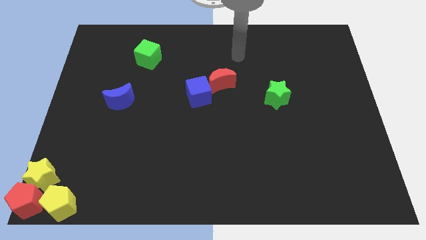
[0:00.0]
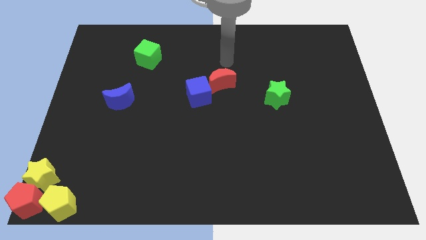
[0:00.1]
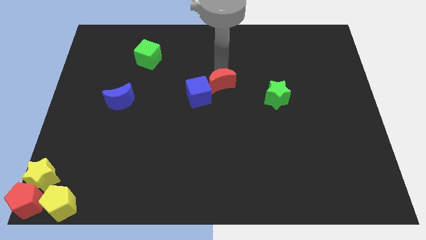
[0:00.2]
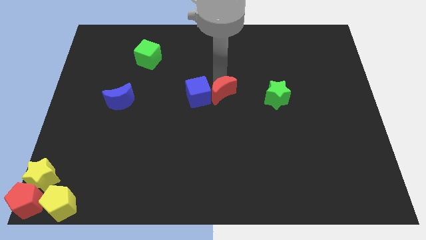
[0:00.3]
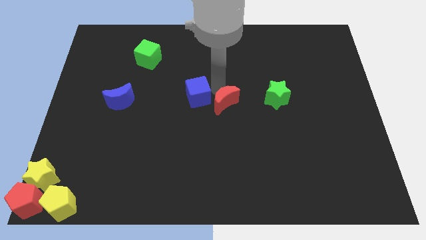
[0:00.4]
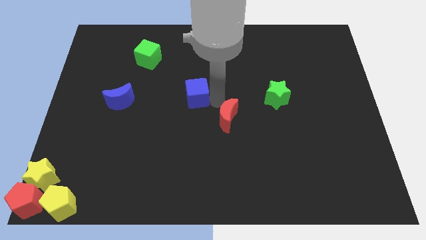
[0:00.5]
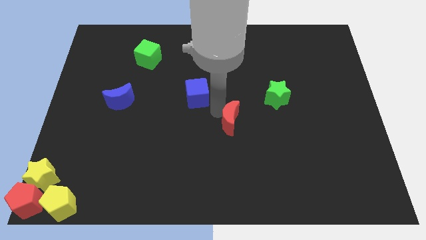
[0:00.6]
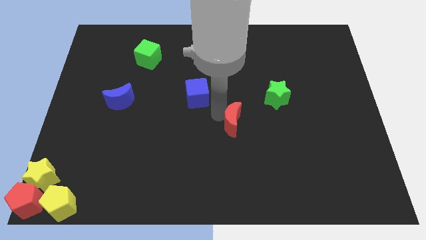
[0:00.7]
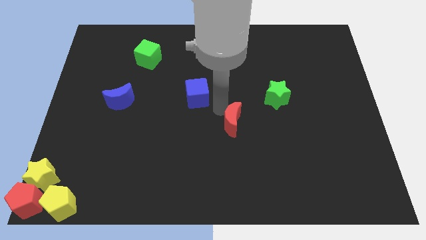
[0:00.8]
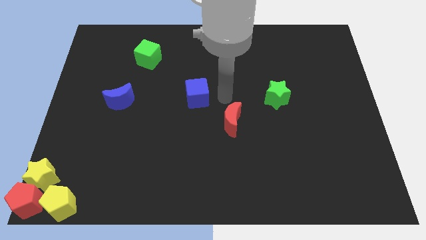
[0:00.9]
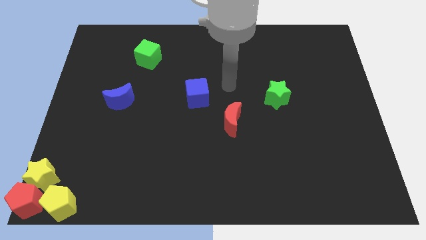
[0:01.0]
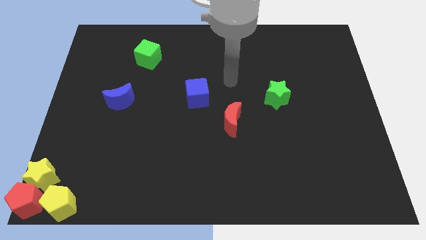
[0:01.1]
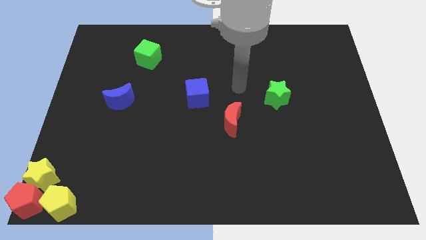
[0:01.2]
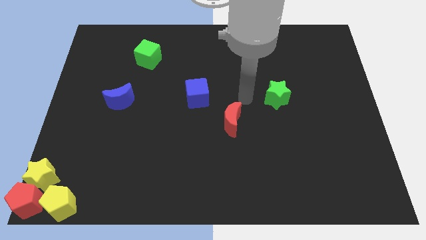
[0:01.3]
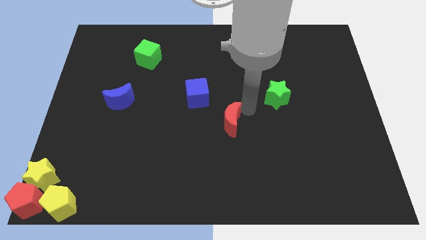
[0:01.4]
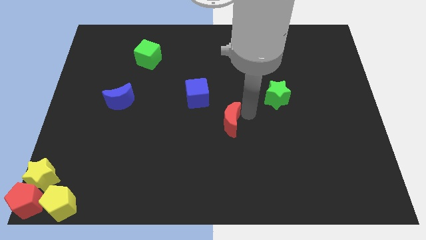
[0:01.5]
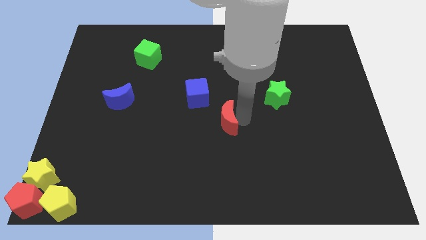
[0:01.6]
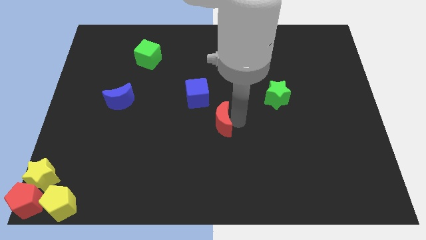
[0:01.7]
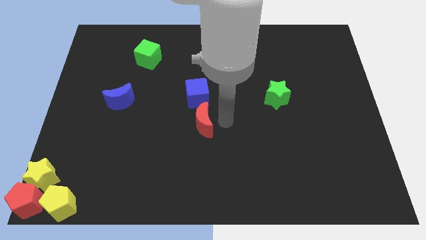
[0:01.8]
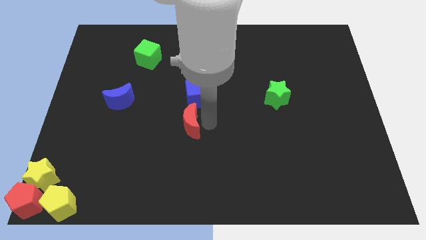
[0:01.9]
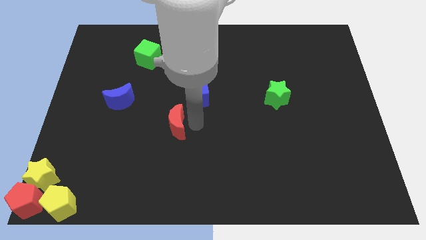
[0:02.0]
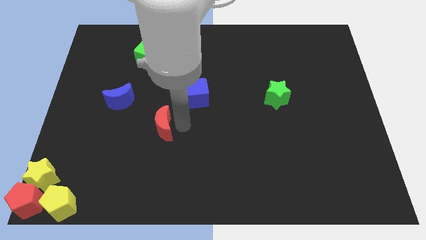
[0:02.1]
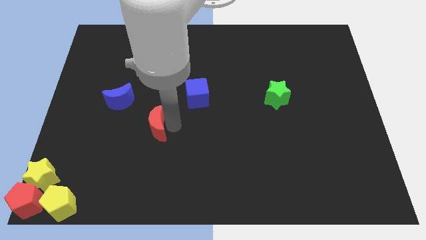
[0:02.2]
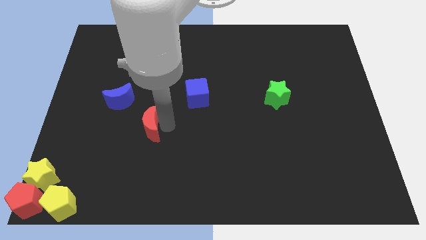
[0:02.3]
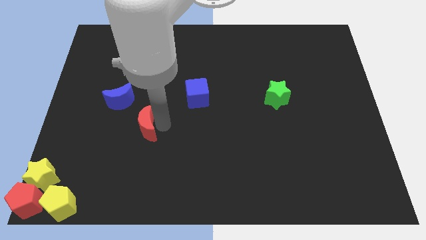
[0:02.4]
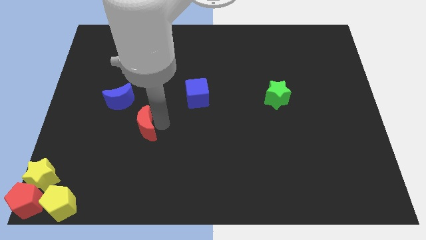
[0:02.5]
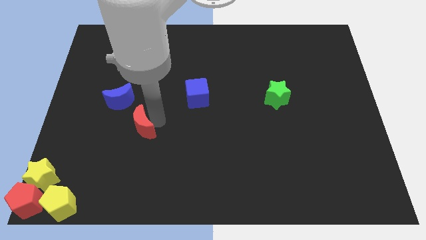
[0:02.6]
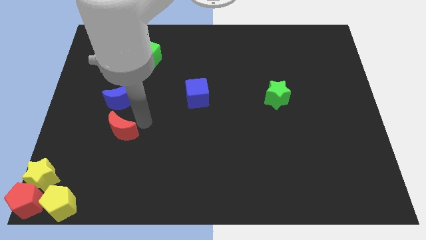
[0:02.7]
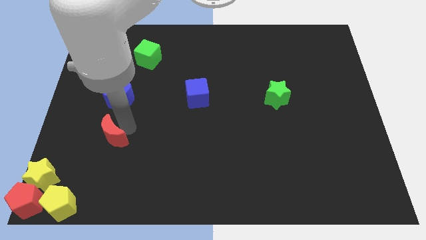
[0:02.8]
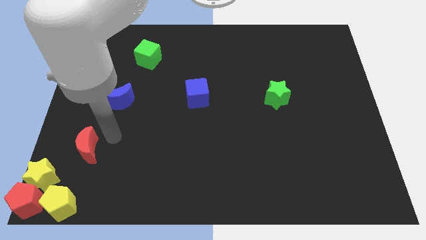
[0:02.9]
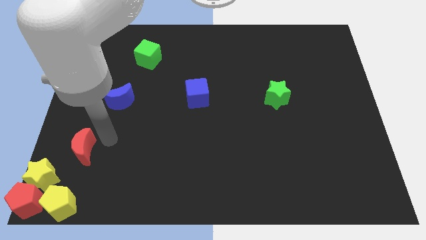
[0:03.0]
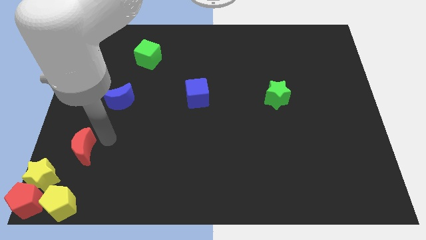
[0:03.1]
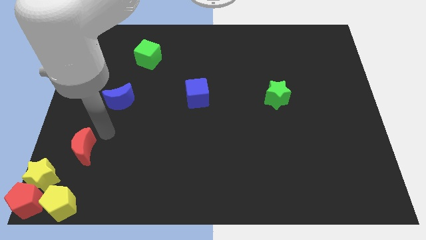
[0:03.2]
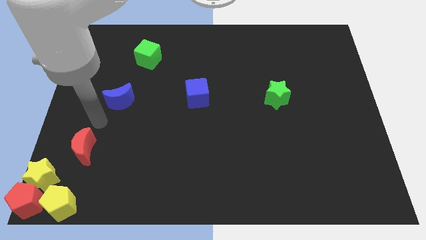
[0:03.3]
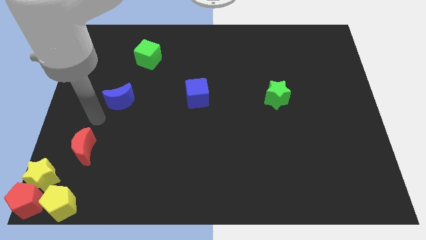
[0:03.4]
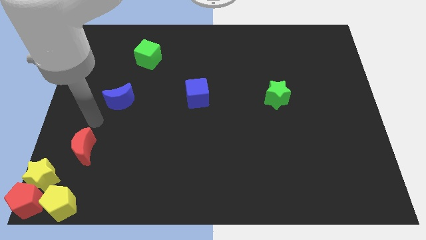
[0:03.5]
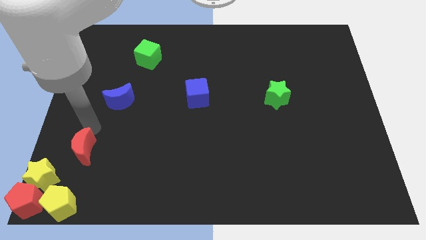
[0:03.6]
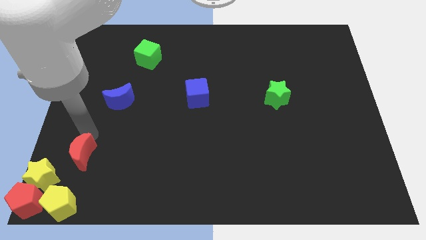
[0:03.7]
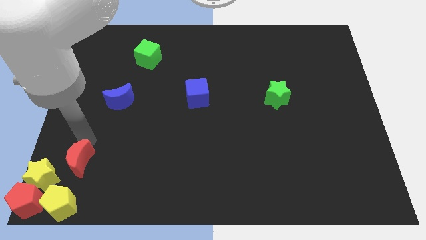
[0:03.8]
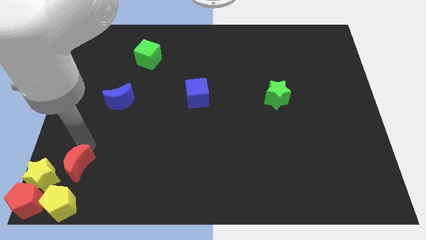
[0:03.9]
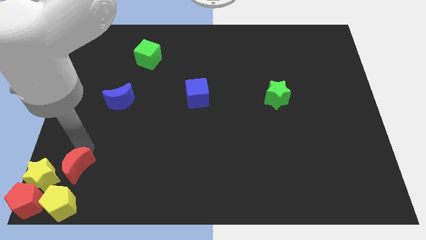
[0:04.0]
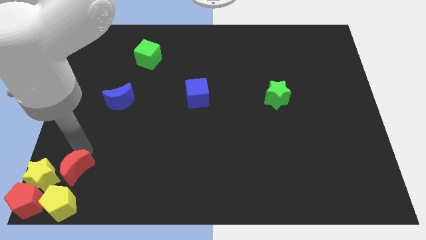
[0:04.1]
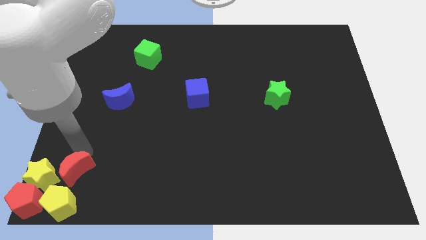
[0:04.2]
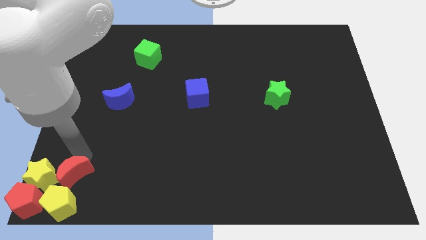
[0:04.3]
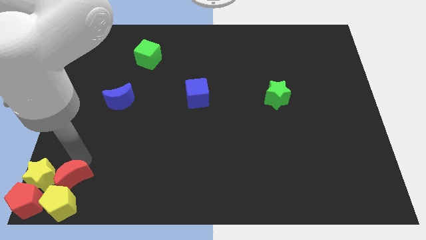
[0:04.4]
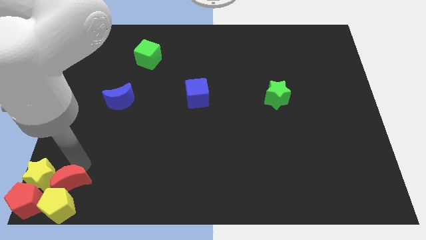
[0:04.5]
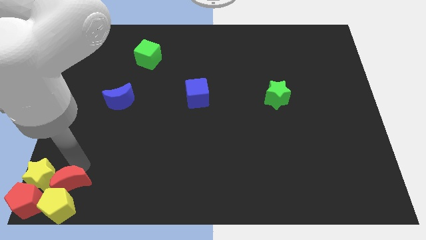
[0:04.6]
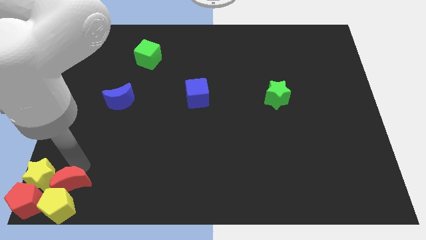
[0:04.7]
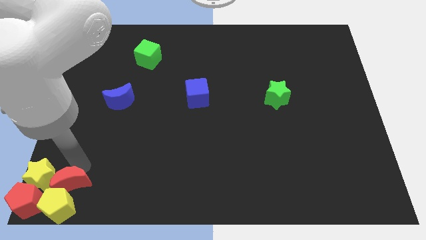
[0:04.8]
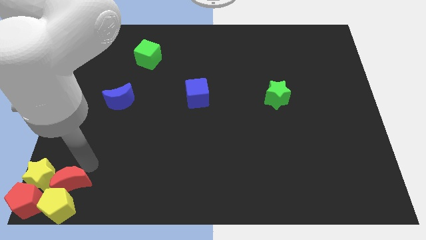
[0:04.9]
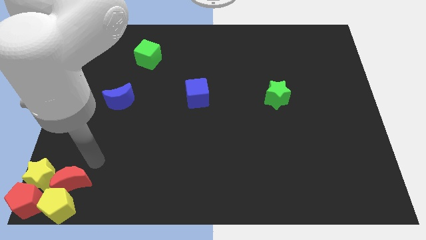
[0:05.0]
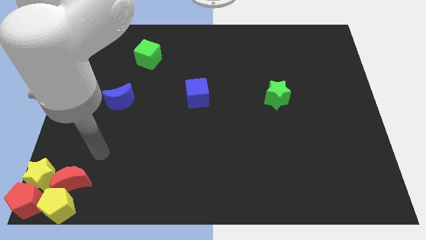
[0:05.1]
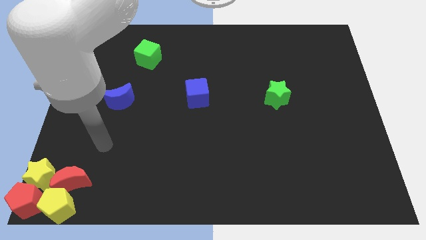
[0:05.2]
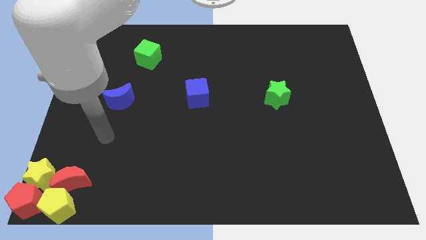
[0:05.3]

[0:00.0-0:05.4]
move the red crescent to the bottom left corner

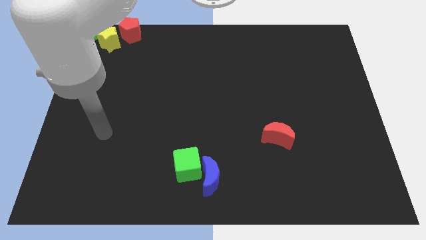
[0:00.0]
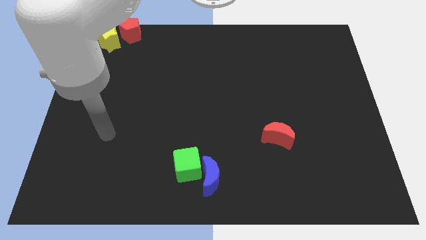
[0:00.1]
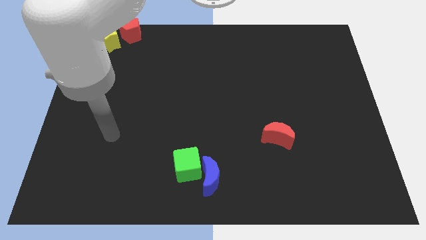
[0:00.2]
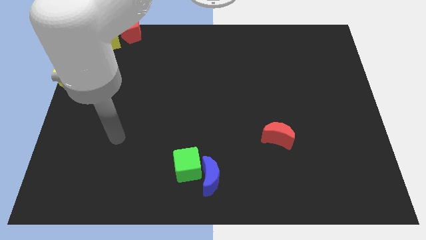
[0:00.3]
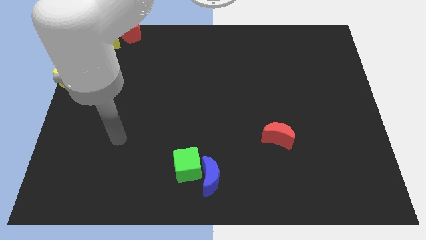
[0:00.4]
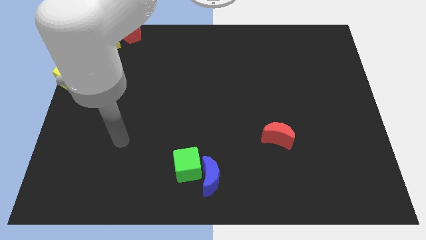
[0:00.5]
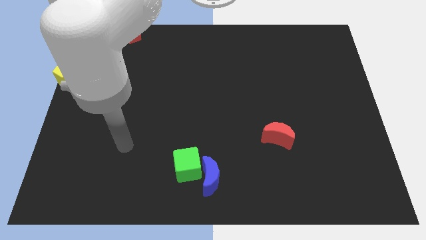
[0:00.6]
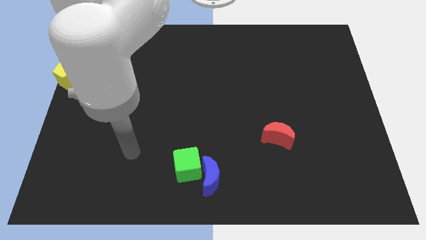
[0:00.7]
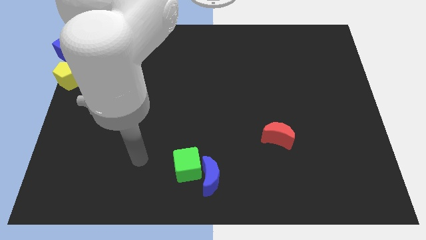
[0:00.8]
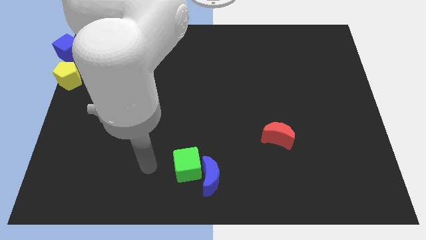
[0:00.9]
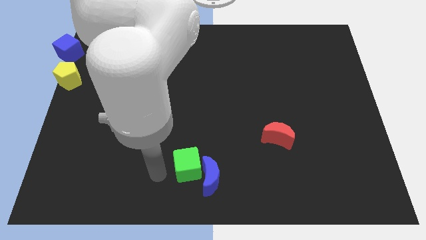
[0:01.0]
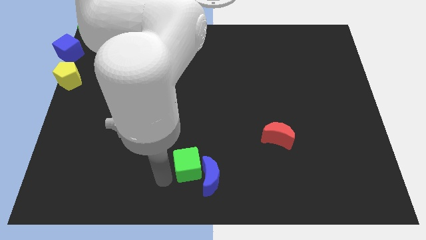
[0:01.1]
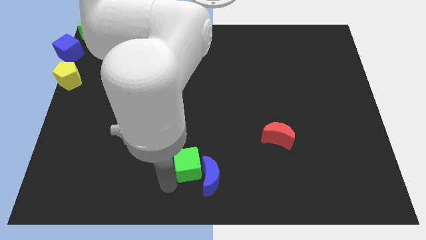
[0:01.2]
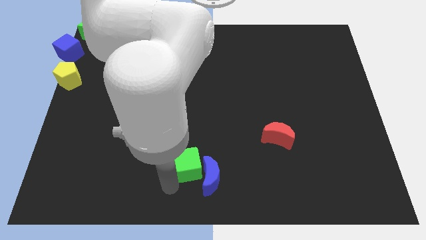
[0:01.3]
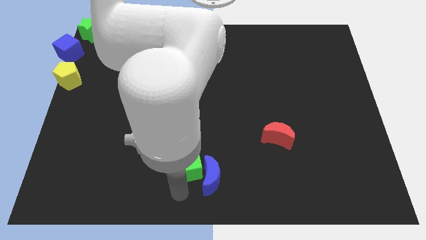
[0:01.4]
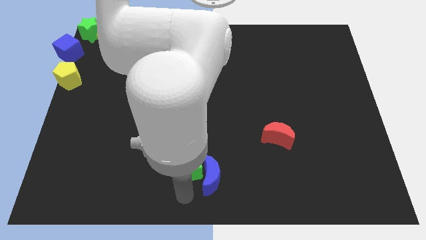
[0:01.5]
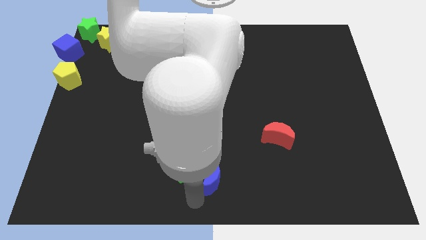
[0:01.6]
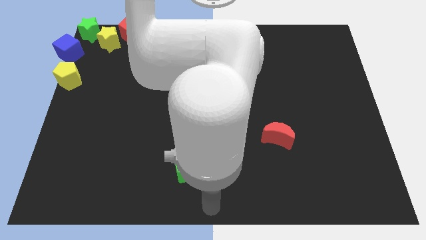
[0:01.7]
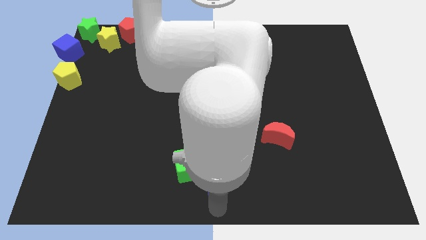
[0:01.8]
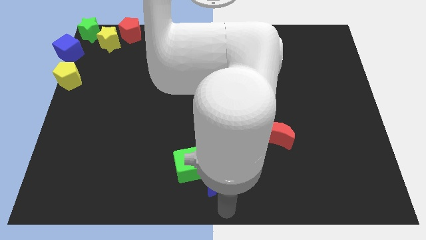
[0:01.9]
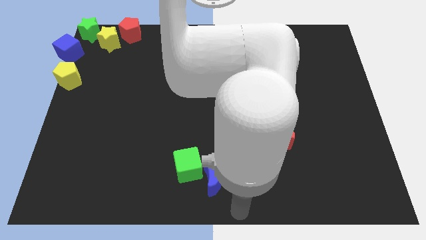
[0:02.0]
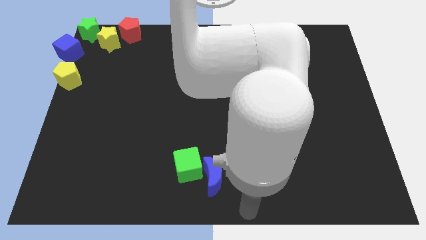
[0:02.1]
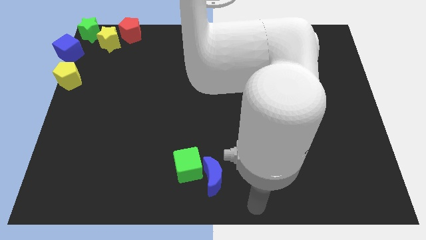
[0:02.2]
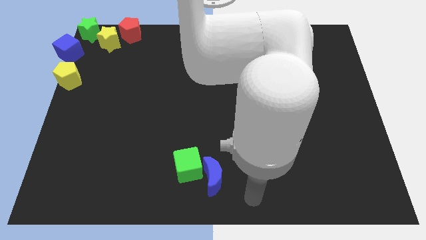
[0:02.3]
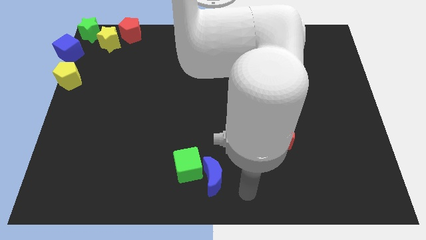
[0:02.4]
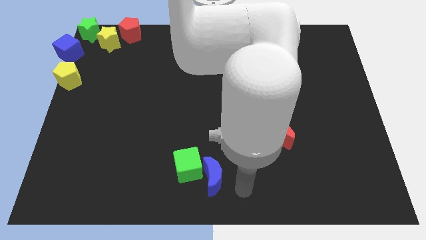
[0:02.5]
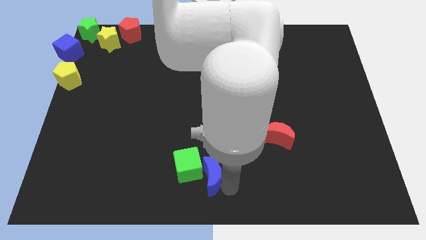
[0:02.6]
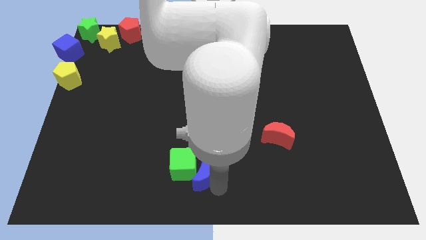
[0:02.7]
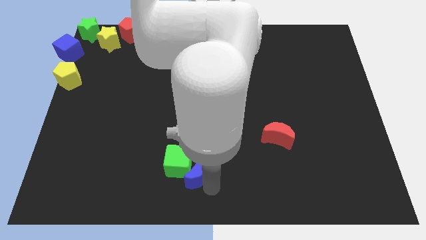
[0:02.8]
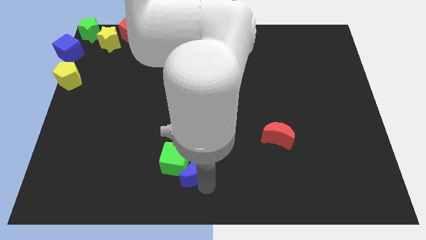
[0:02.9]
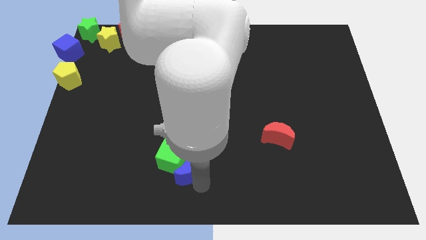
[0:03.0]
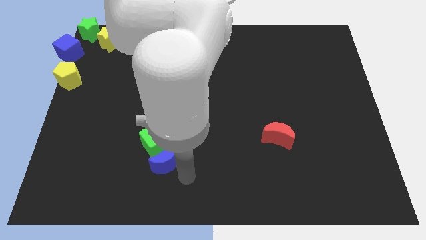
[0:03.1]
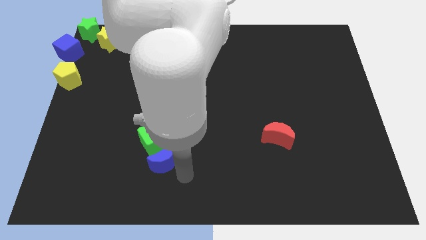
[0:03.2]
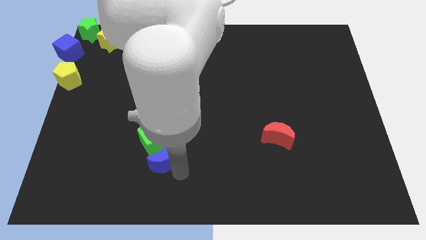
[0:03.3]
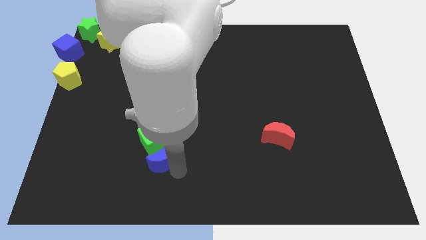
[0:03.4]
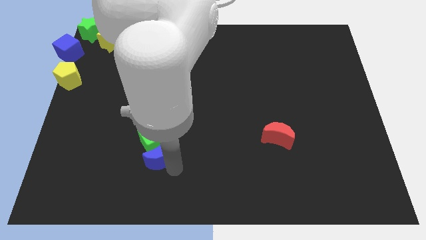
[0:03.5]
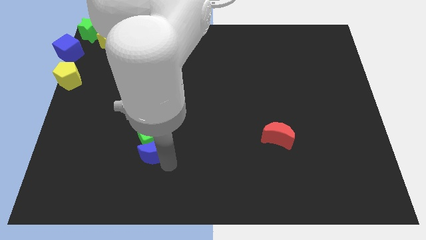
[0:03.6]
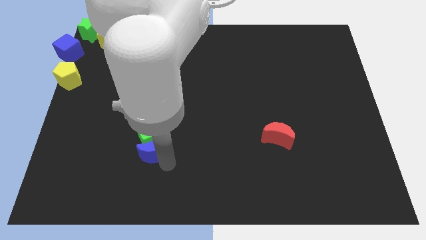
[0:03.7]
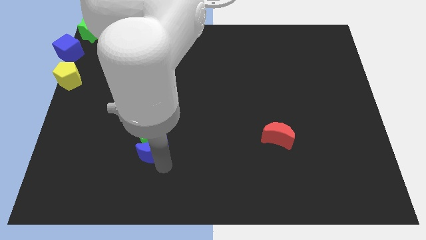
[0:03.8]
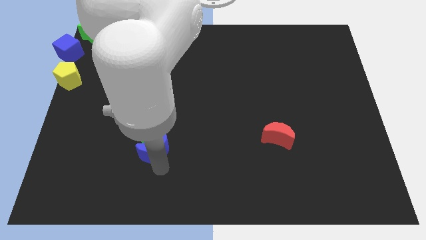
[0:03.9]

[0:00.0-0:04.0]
drag the blue moon and green cube diagonal right below yellow pentagon
